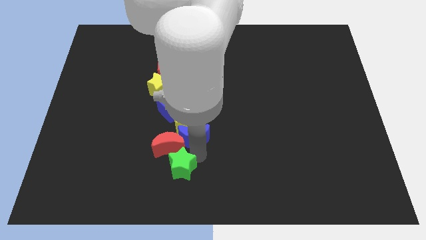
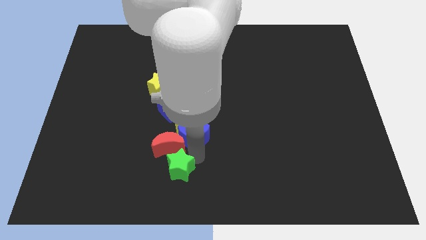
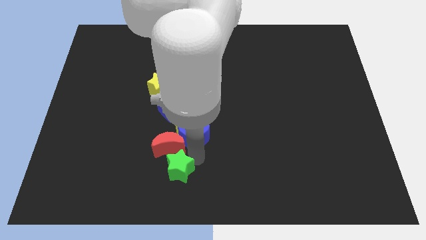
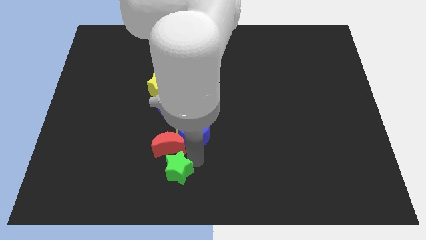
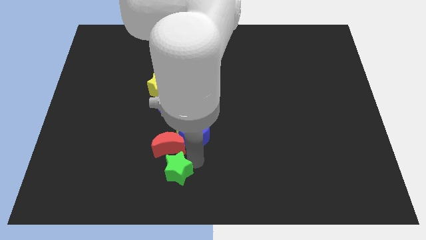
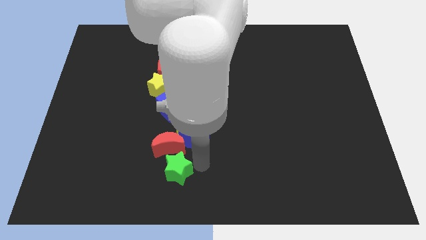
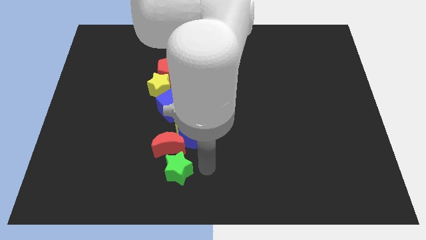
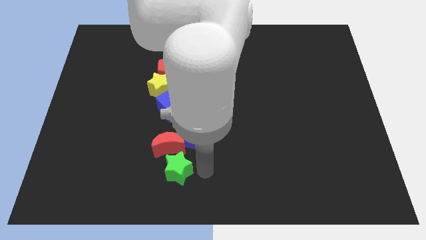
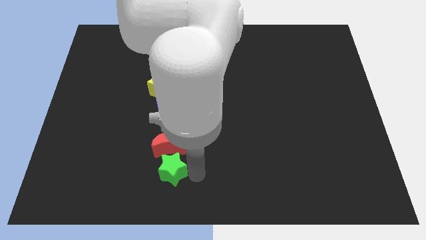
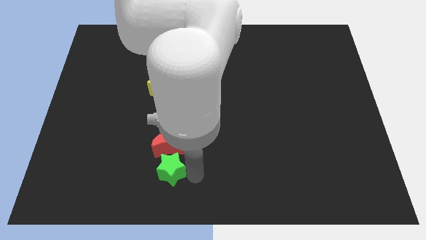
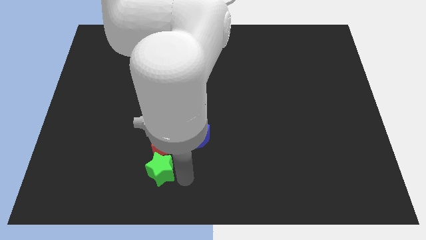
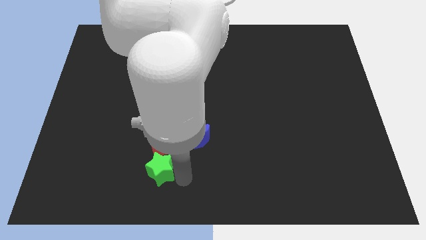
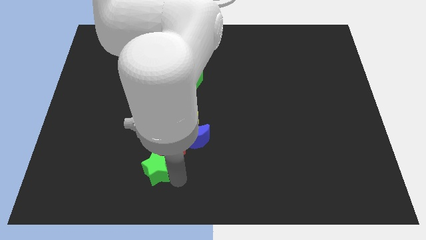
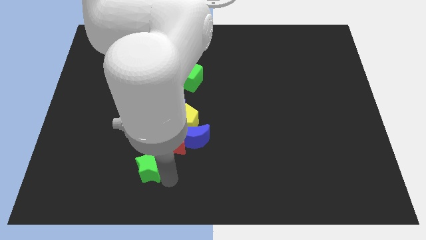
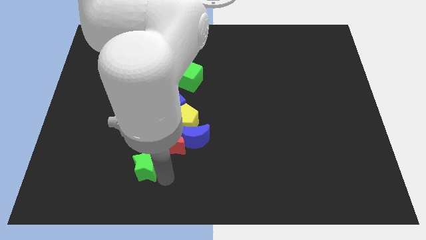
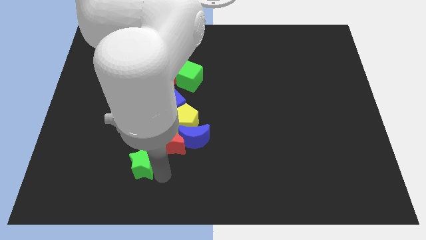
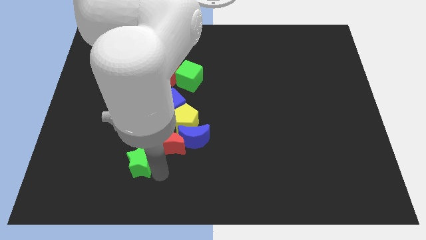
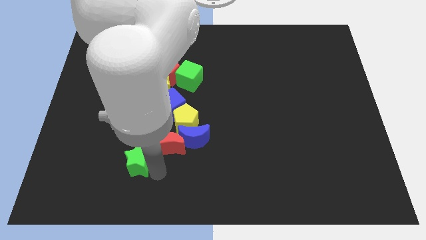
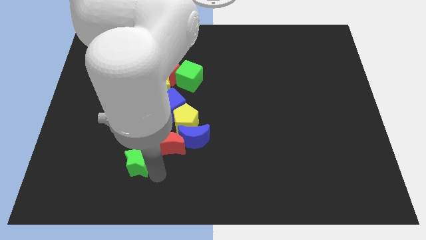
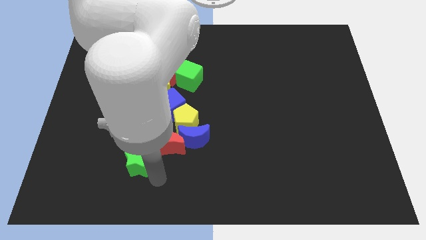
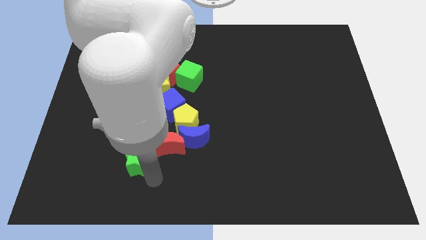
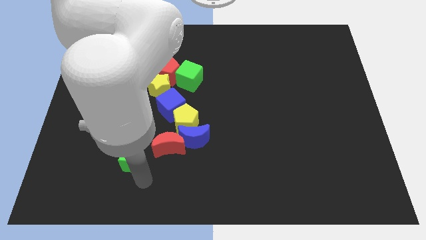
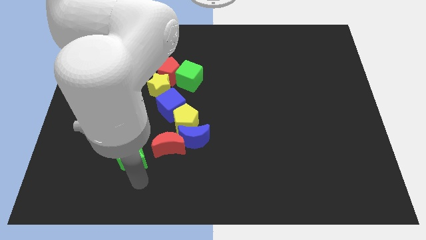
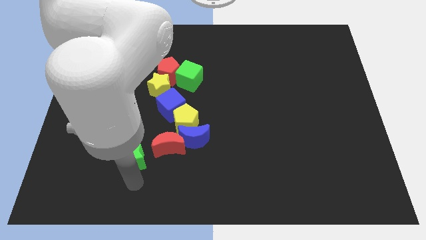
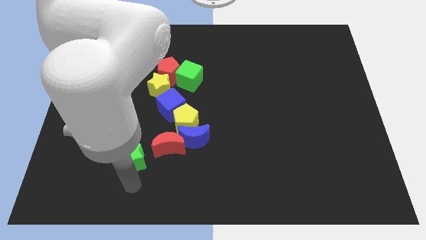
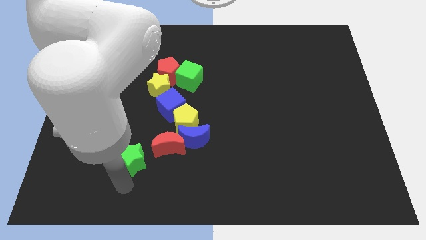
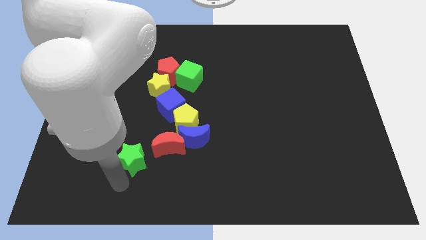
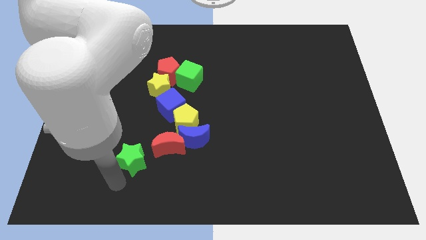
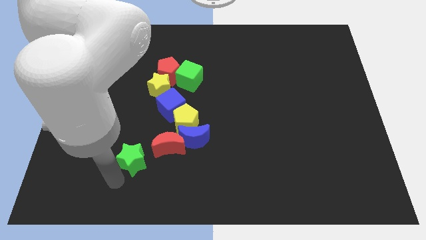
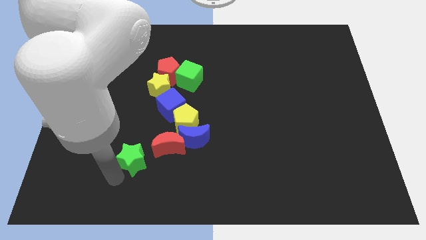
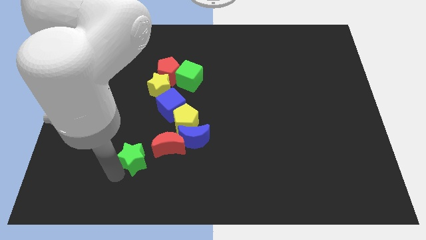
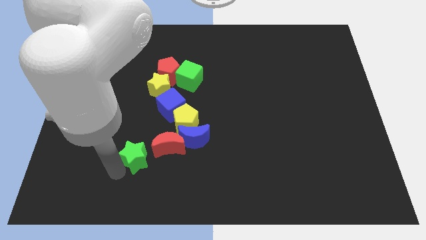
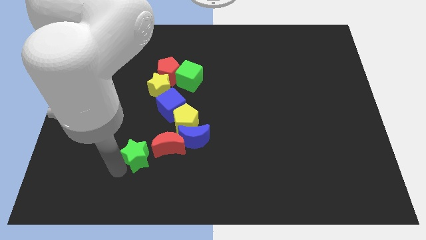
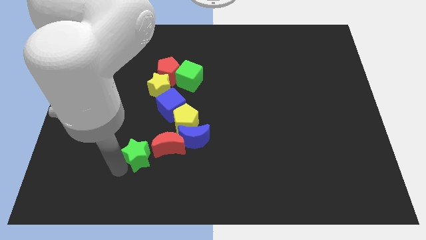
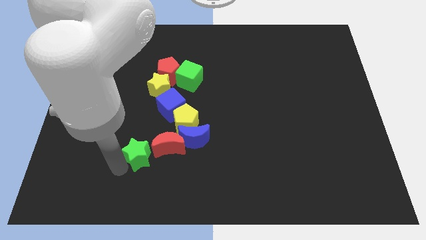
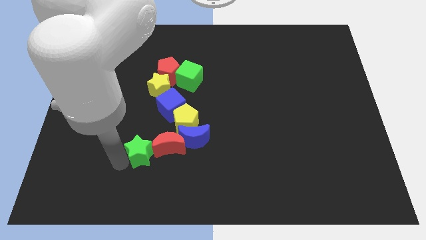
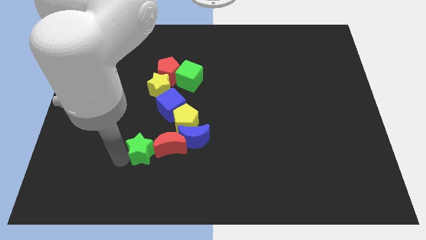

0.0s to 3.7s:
move green star towards red moon

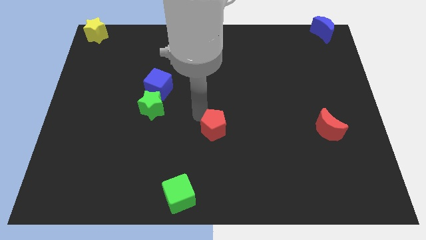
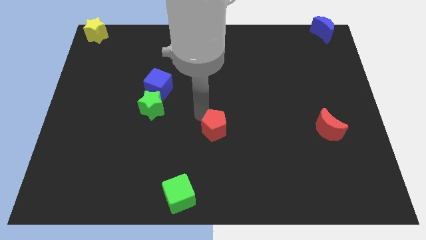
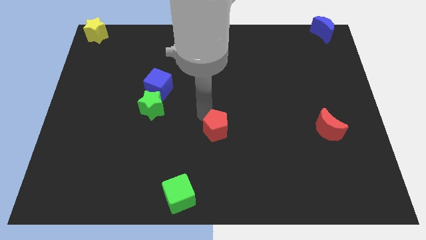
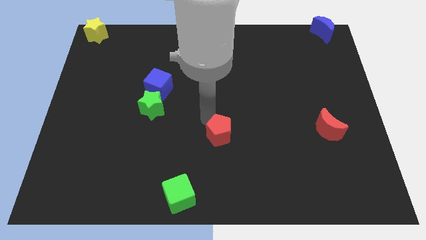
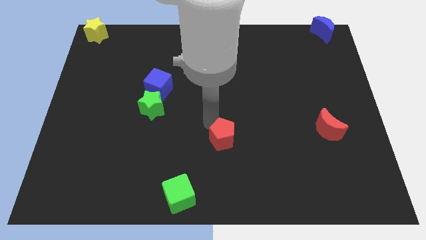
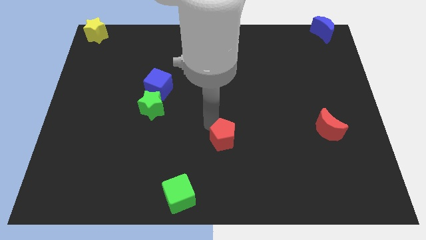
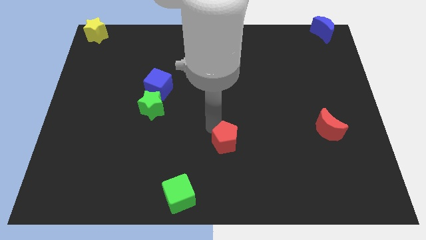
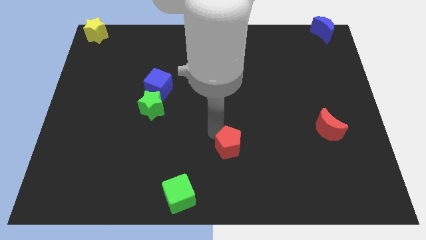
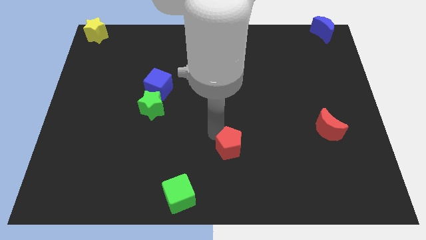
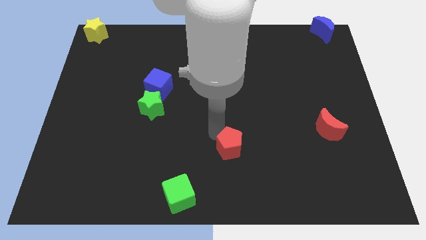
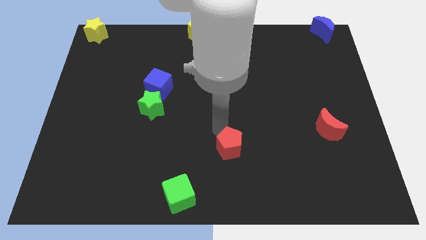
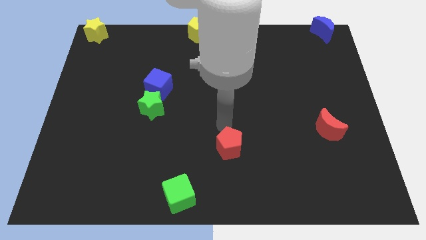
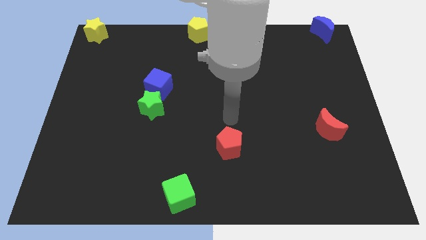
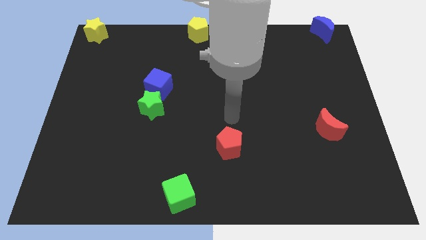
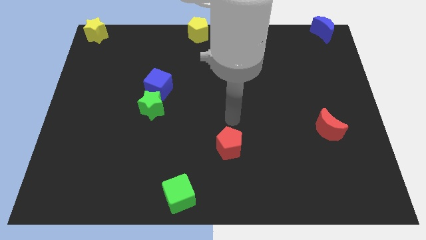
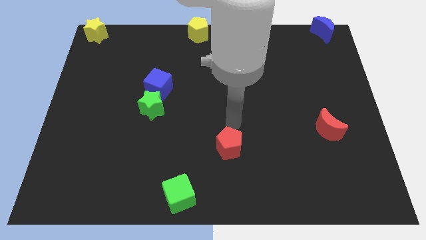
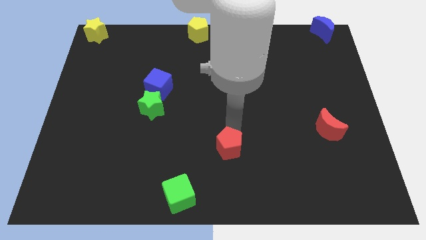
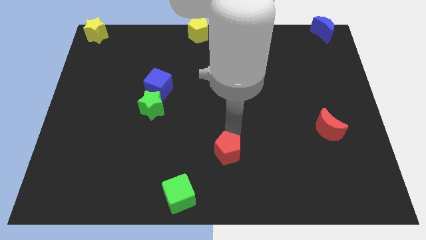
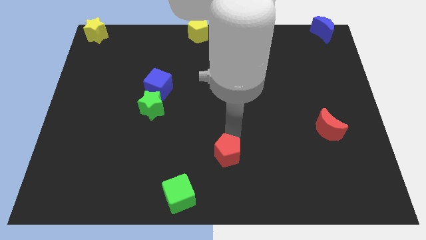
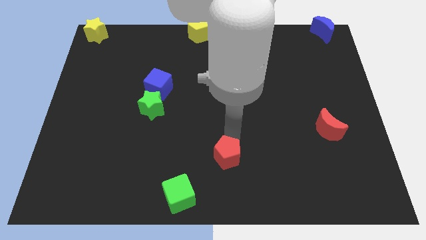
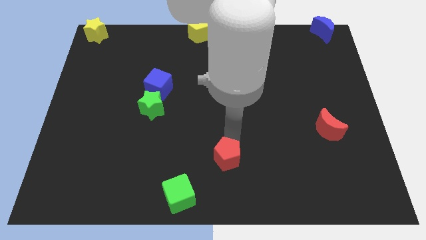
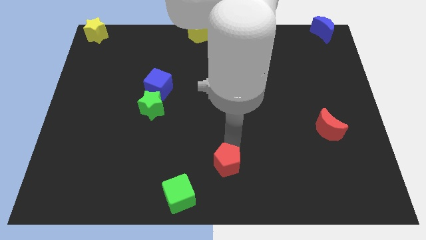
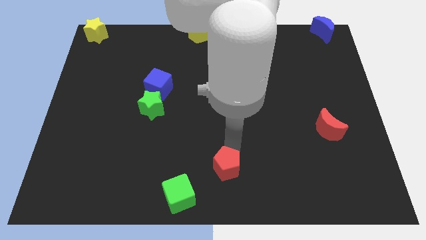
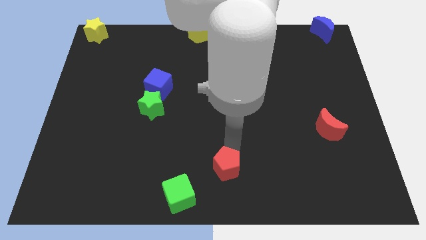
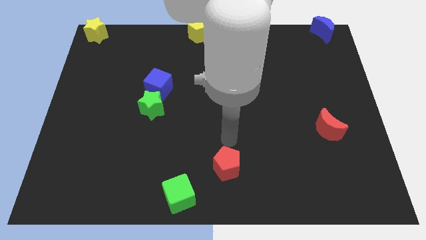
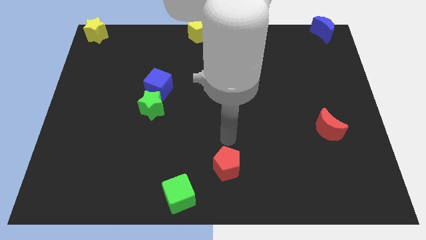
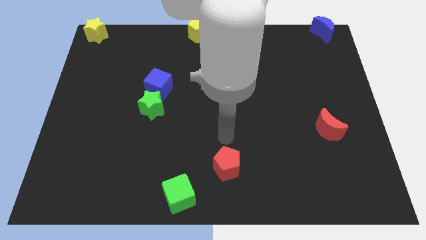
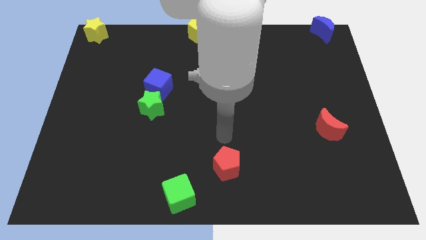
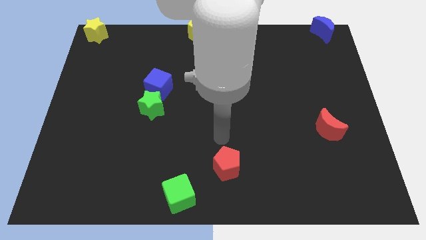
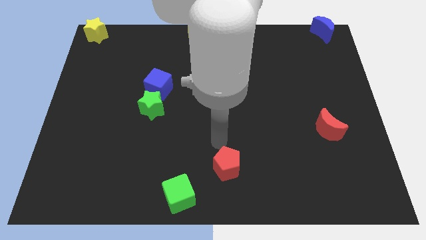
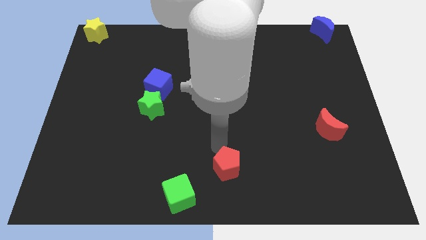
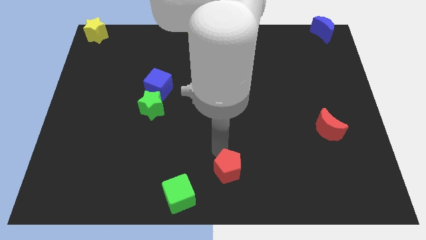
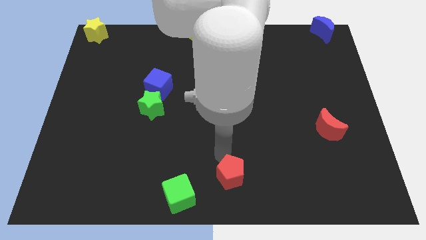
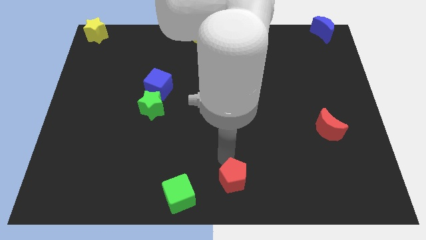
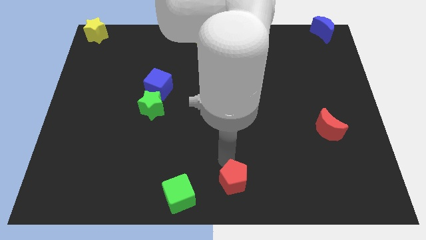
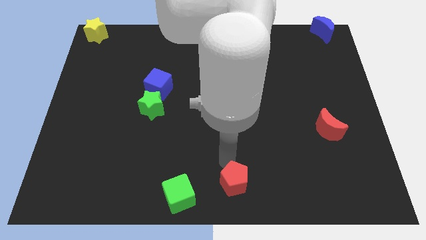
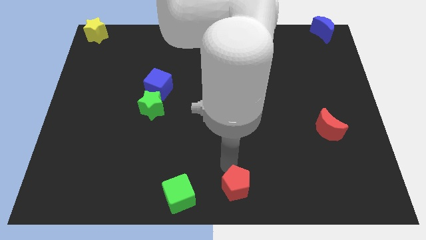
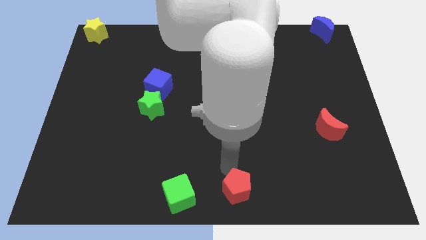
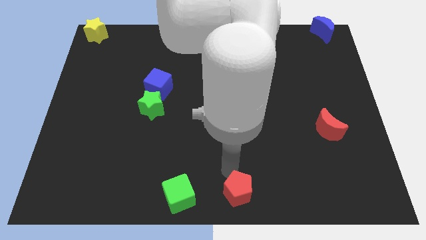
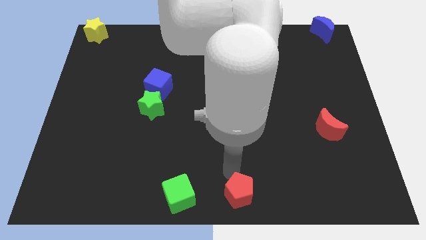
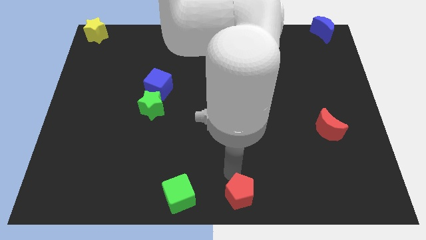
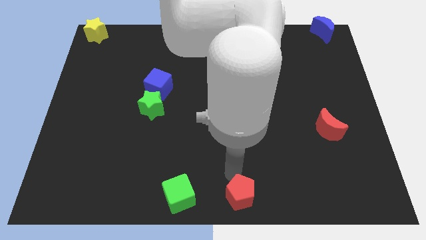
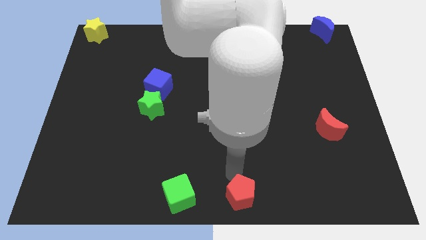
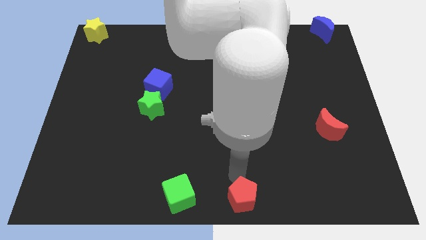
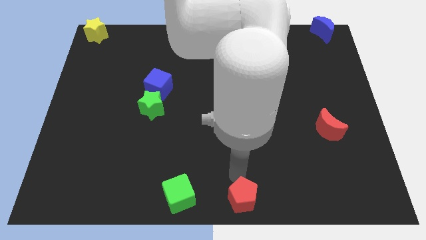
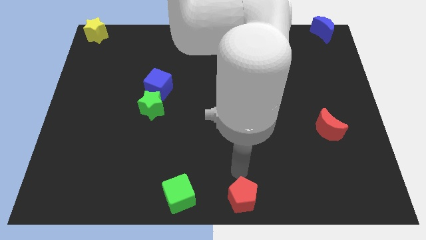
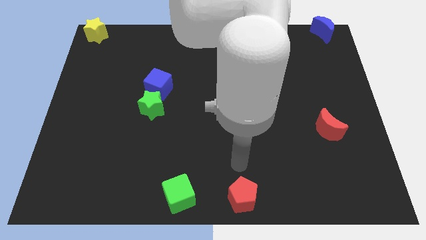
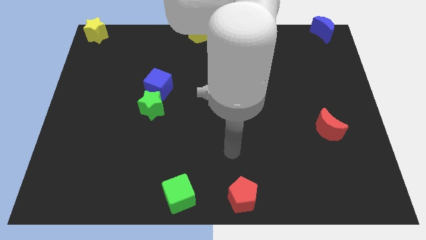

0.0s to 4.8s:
place the red pentagon to the right side of green cube

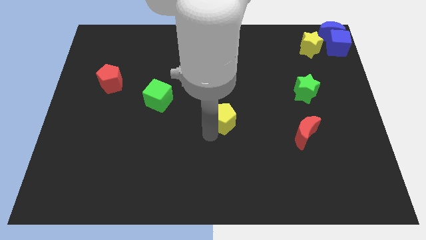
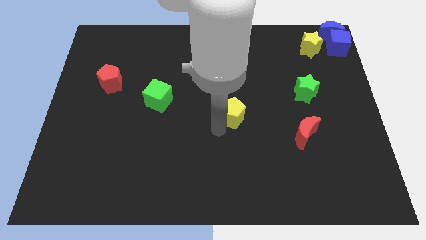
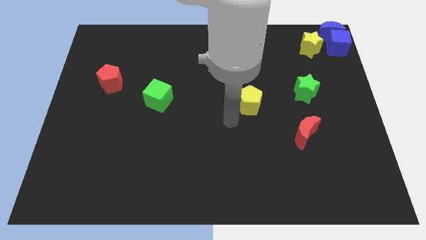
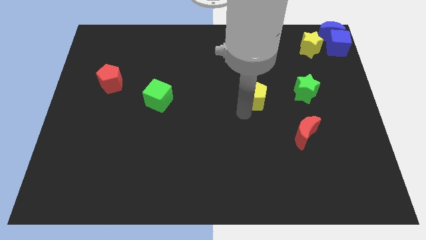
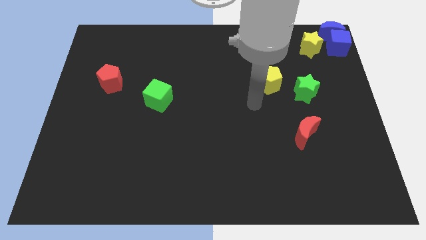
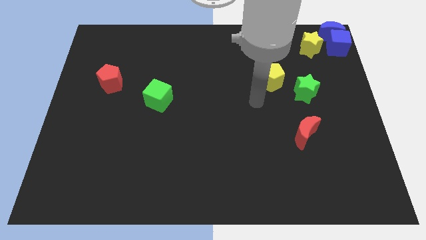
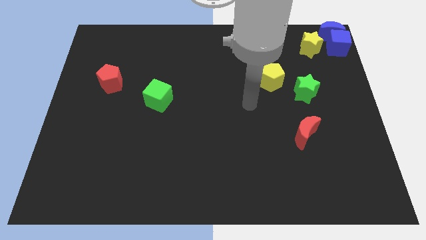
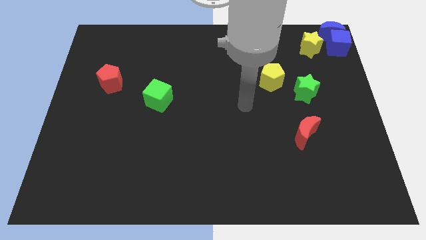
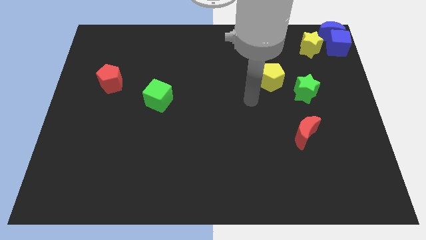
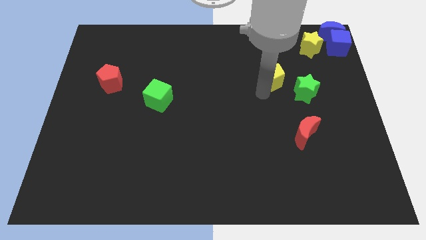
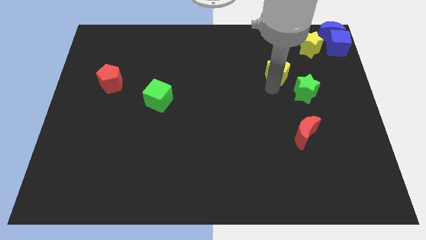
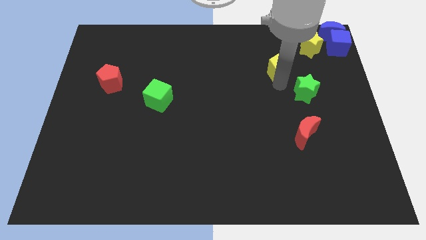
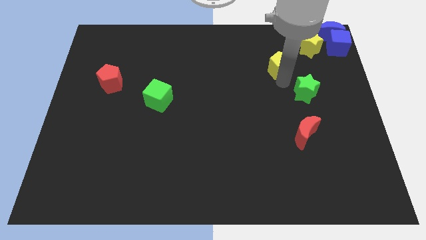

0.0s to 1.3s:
place yellow pentagon diagonally top right to the green cube
